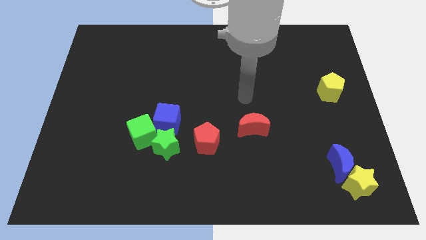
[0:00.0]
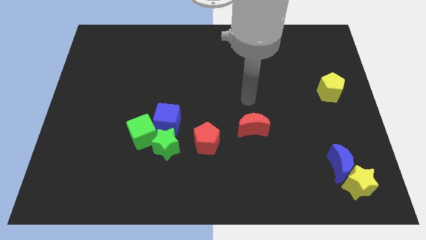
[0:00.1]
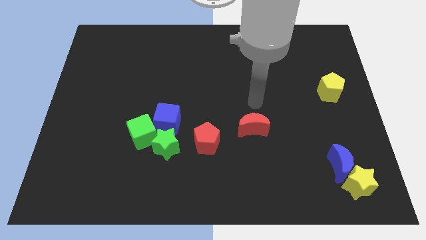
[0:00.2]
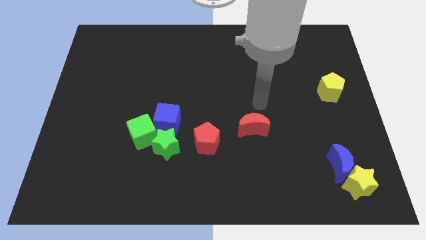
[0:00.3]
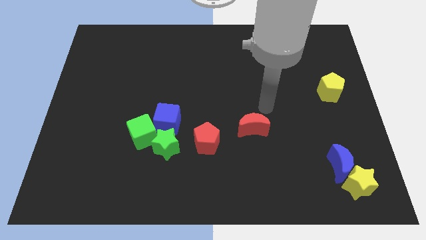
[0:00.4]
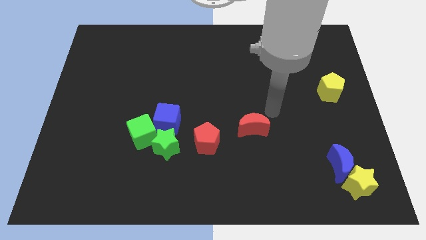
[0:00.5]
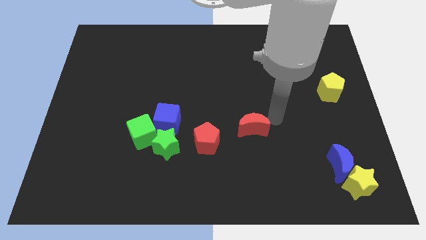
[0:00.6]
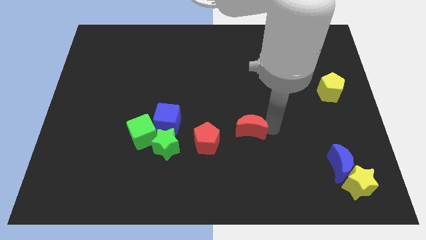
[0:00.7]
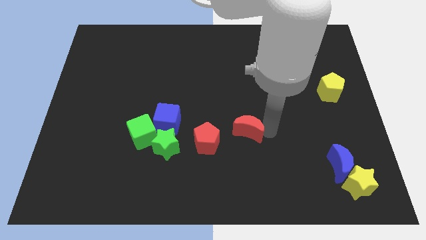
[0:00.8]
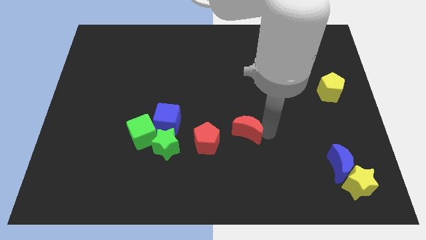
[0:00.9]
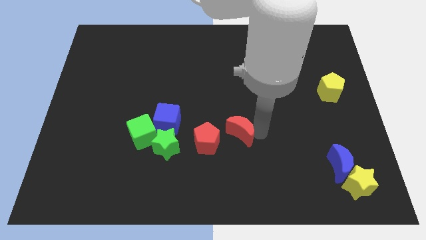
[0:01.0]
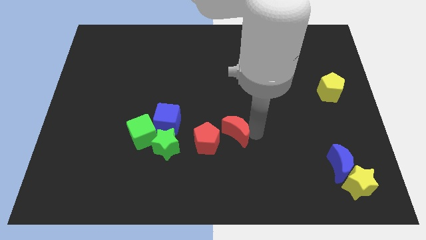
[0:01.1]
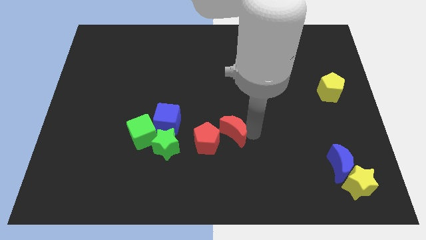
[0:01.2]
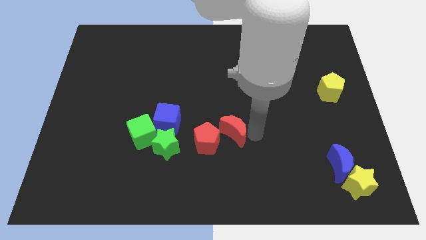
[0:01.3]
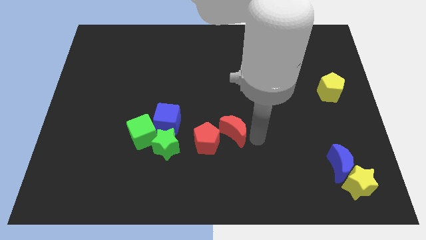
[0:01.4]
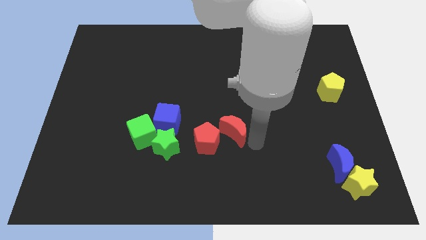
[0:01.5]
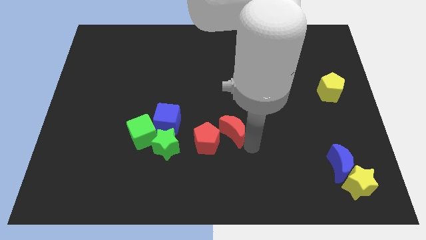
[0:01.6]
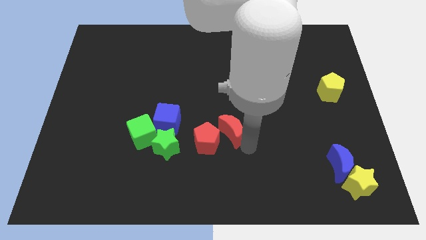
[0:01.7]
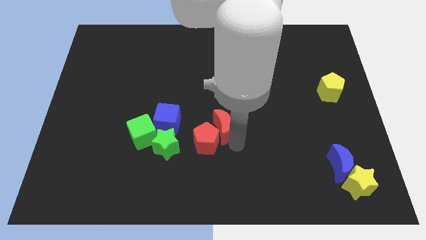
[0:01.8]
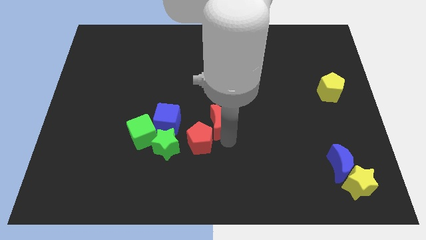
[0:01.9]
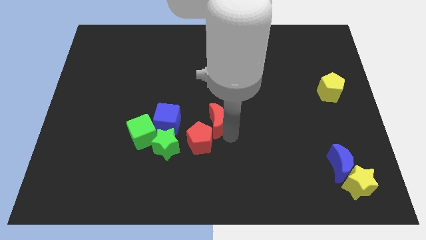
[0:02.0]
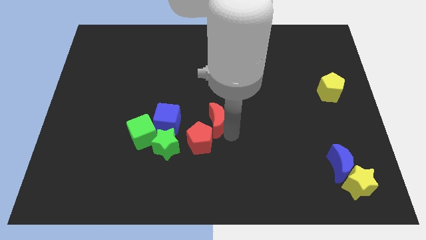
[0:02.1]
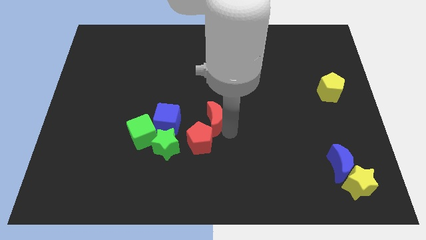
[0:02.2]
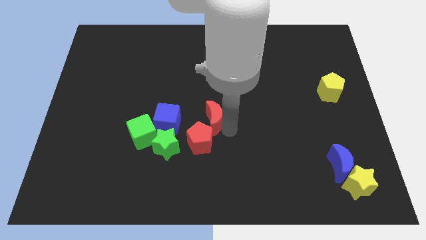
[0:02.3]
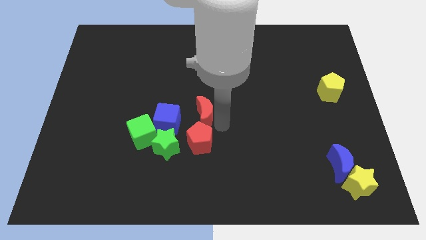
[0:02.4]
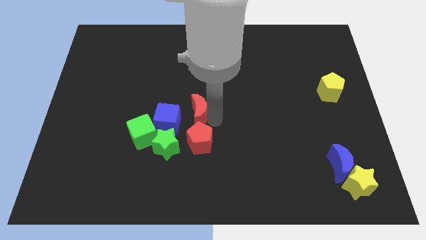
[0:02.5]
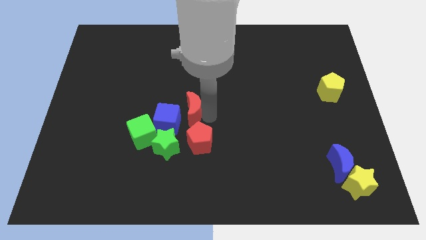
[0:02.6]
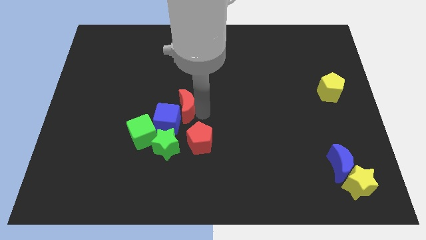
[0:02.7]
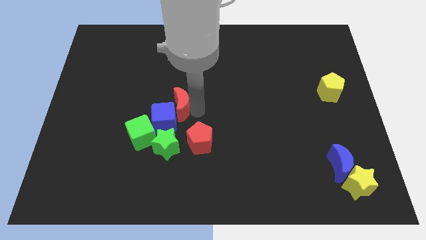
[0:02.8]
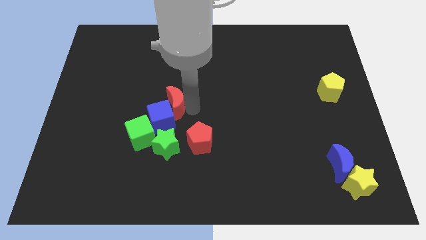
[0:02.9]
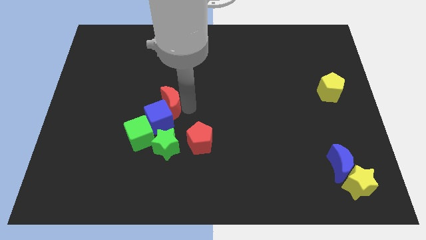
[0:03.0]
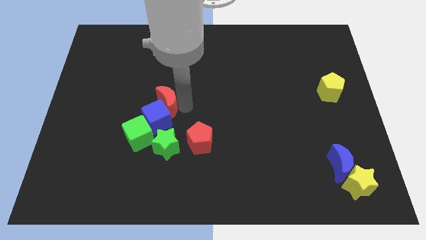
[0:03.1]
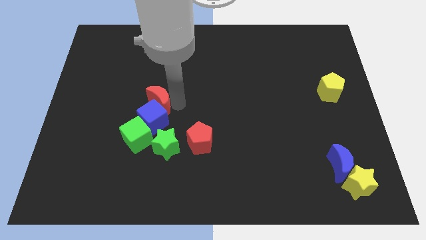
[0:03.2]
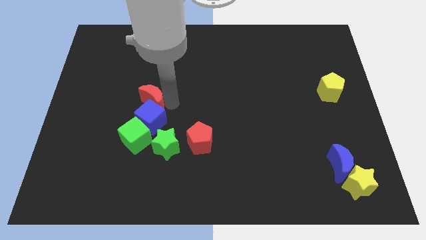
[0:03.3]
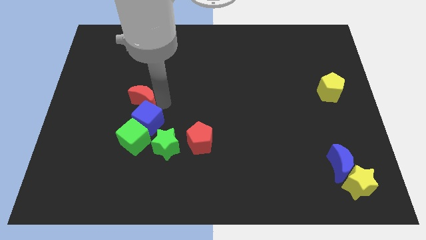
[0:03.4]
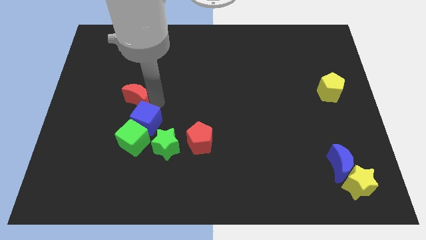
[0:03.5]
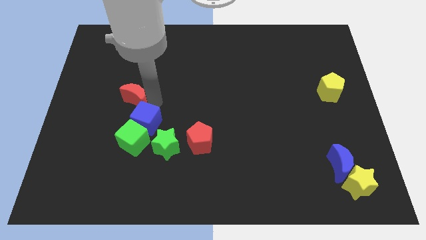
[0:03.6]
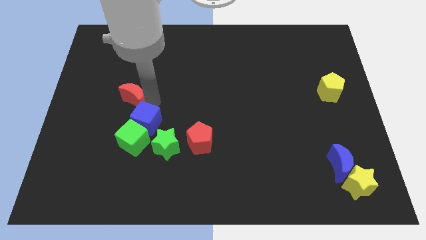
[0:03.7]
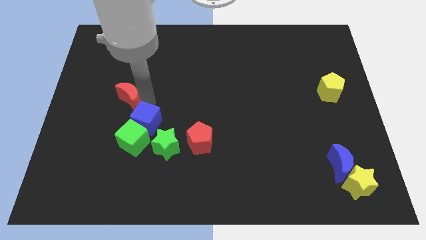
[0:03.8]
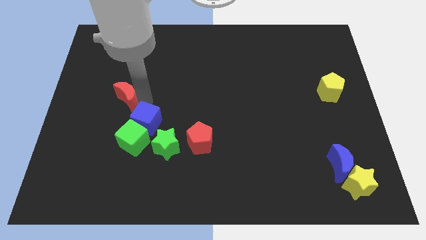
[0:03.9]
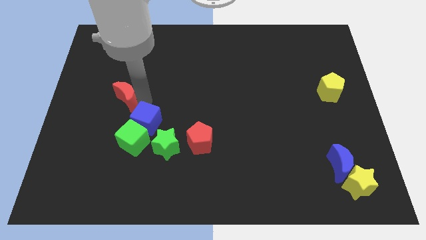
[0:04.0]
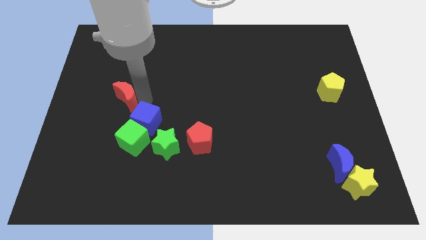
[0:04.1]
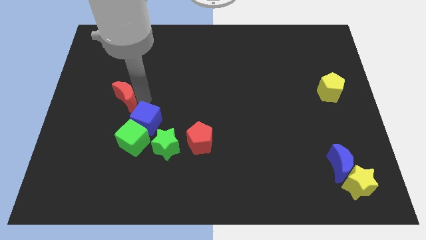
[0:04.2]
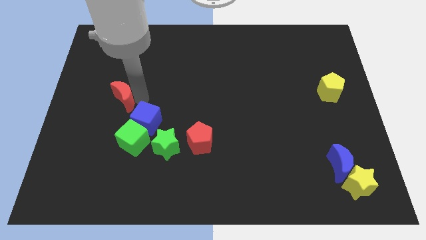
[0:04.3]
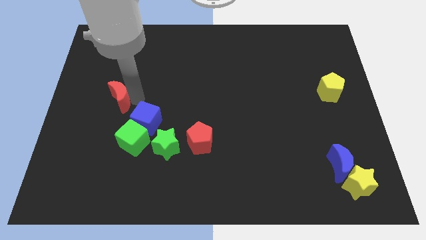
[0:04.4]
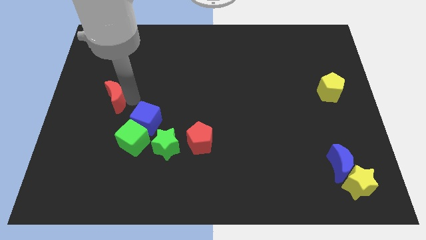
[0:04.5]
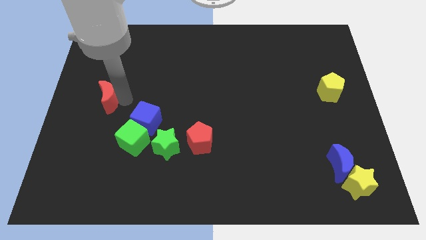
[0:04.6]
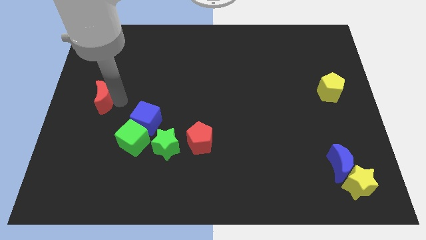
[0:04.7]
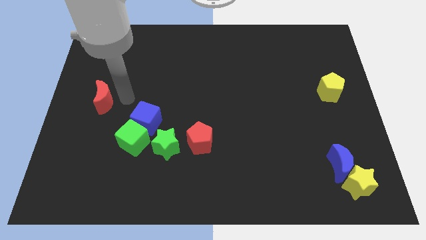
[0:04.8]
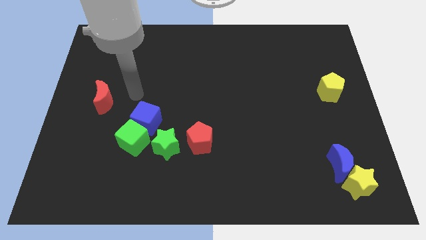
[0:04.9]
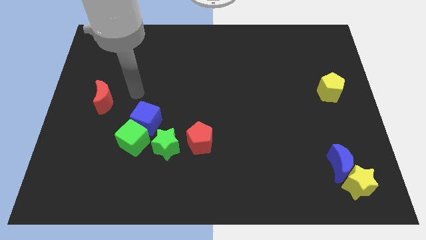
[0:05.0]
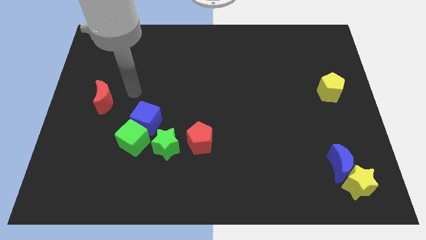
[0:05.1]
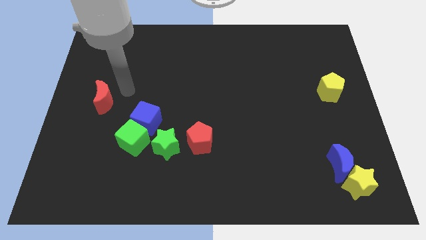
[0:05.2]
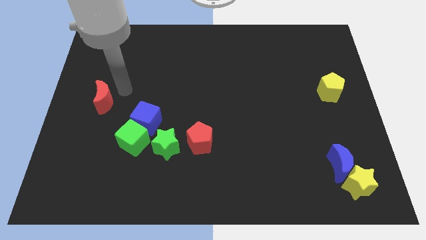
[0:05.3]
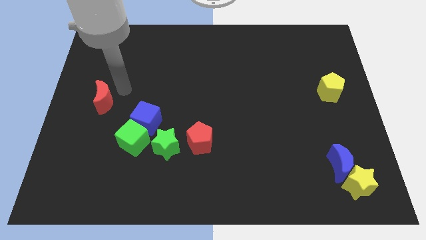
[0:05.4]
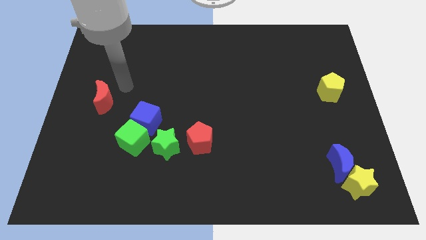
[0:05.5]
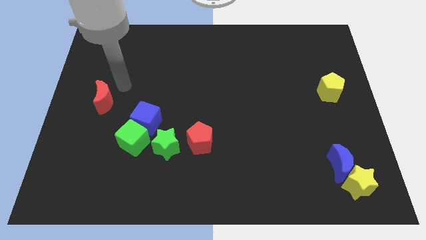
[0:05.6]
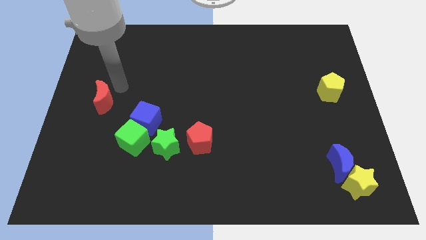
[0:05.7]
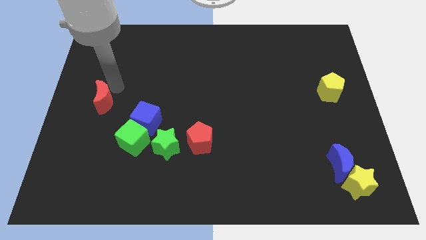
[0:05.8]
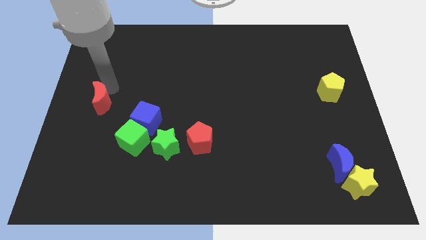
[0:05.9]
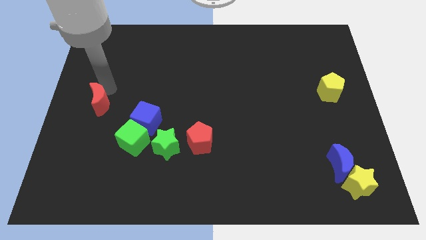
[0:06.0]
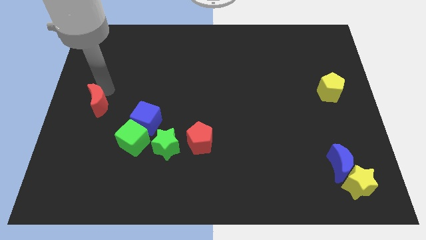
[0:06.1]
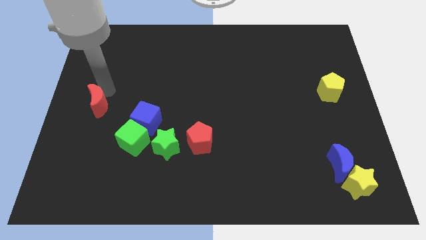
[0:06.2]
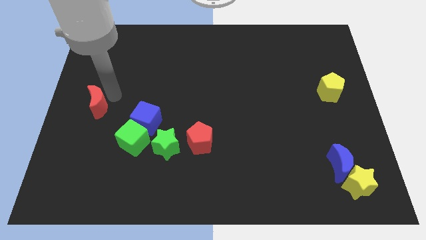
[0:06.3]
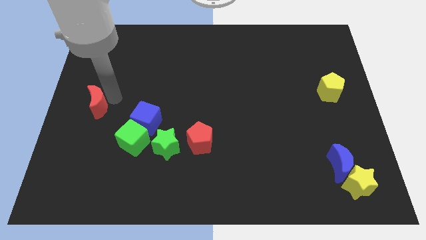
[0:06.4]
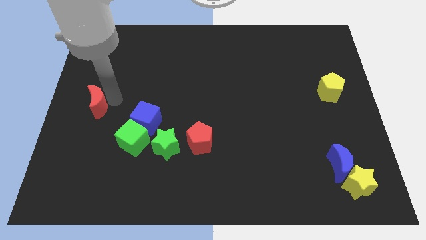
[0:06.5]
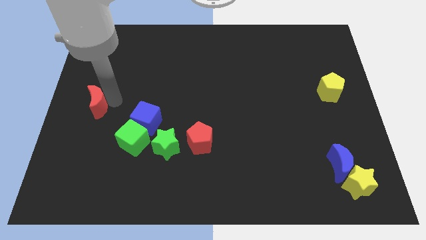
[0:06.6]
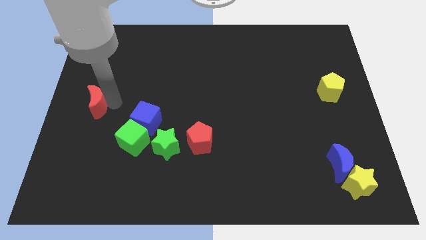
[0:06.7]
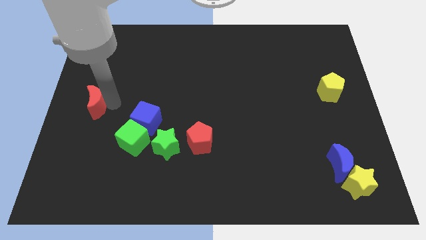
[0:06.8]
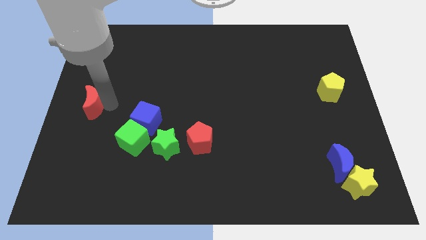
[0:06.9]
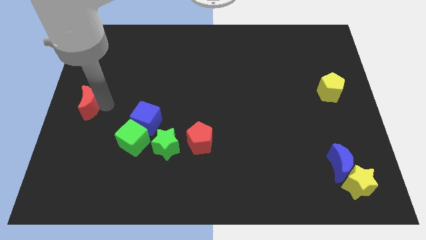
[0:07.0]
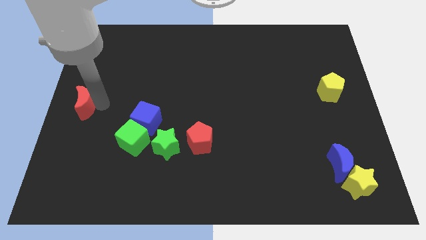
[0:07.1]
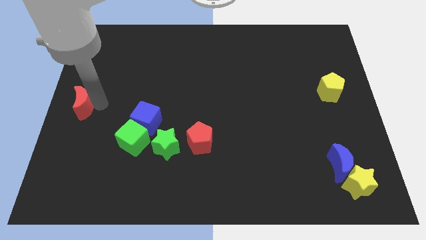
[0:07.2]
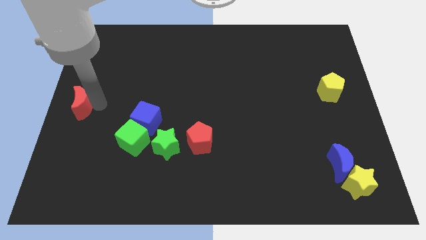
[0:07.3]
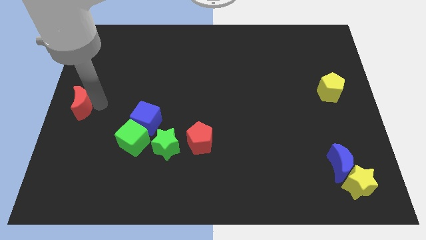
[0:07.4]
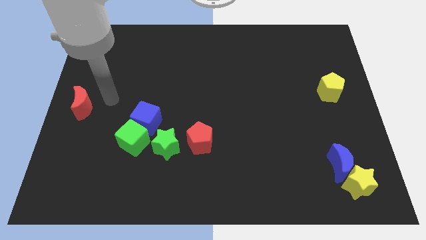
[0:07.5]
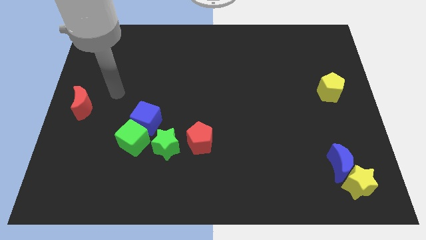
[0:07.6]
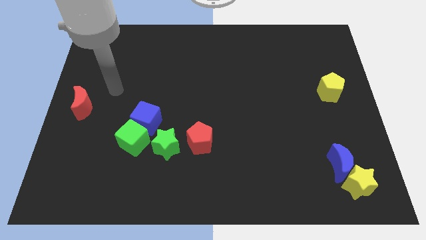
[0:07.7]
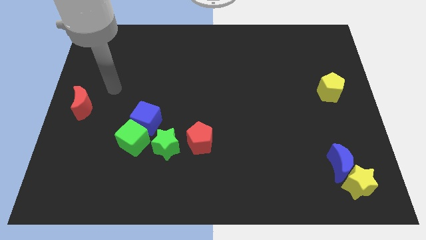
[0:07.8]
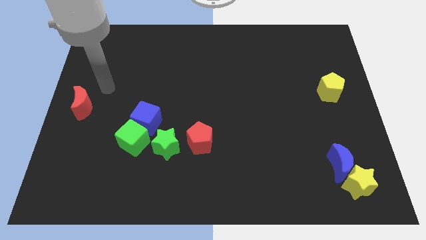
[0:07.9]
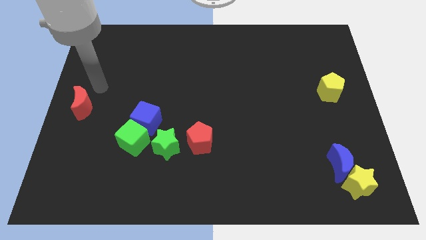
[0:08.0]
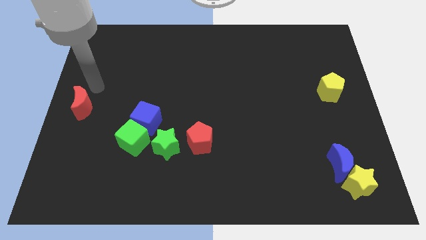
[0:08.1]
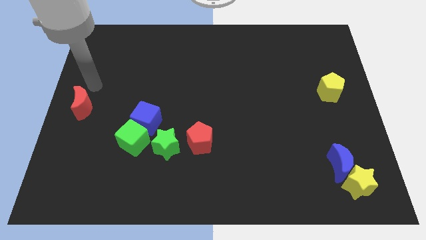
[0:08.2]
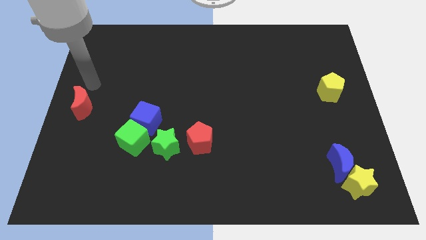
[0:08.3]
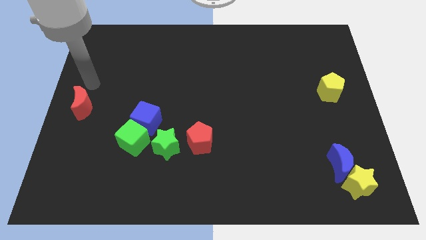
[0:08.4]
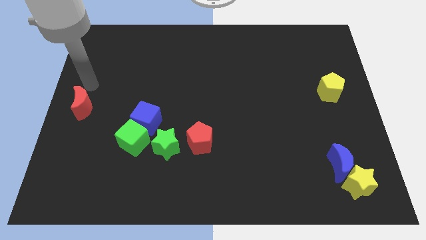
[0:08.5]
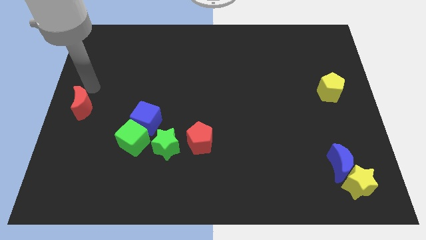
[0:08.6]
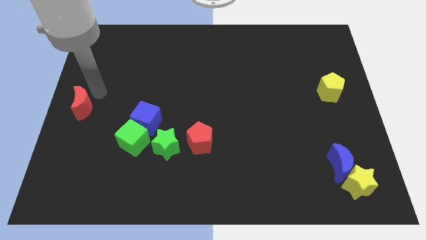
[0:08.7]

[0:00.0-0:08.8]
push the red crecent to the center left

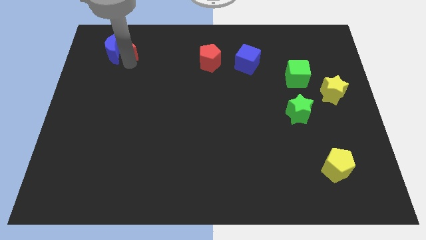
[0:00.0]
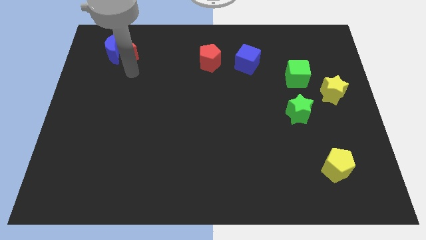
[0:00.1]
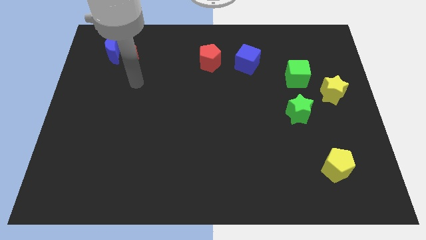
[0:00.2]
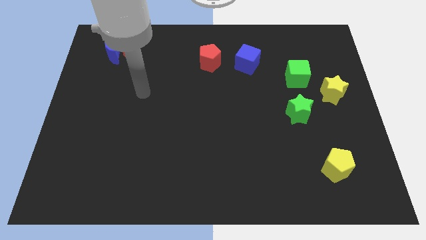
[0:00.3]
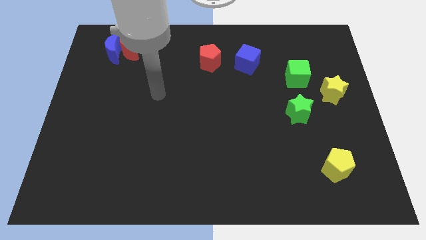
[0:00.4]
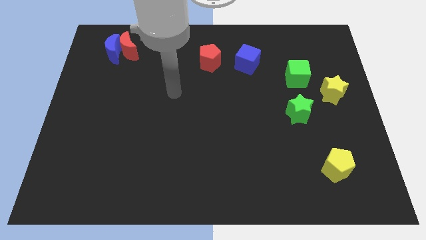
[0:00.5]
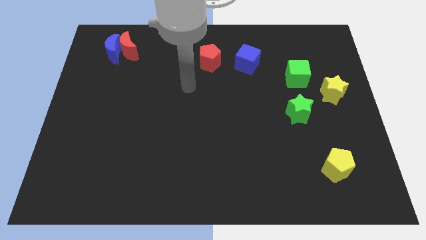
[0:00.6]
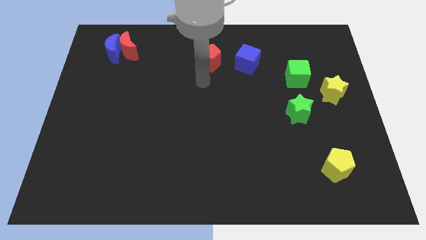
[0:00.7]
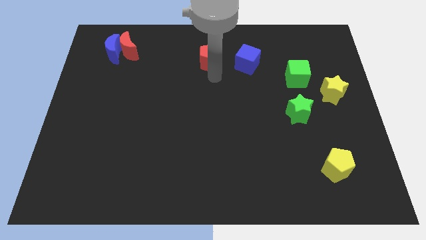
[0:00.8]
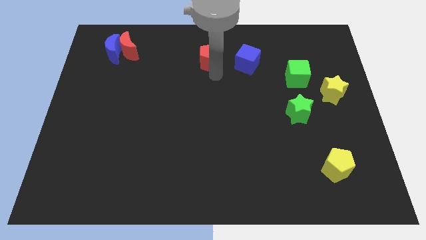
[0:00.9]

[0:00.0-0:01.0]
move arm at the bottom of red pentagon
